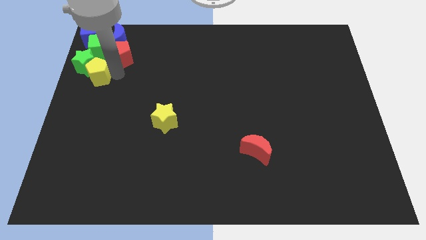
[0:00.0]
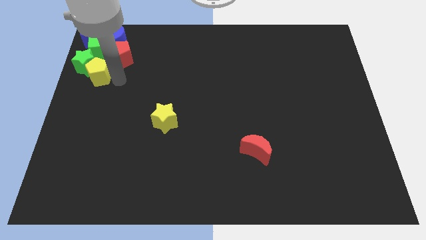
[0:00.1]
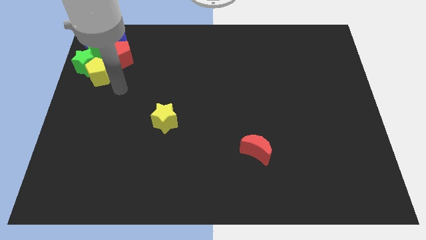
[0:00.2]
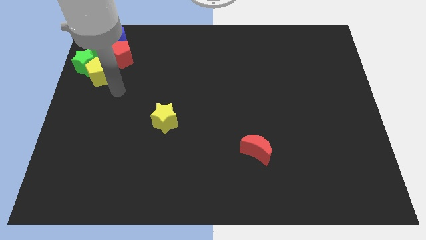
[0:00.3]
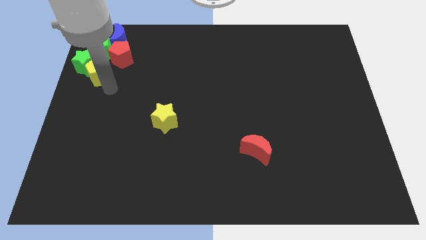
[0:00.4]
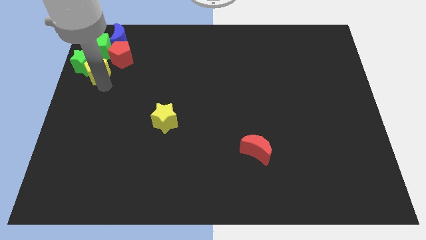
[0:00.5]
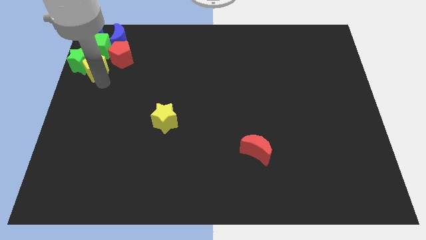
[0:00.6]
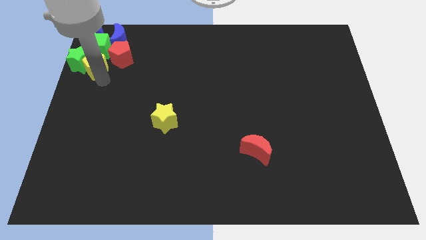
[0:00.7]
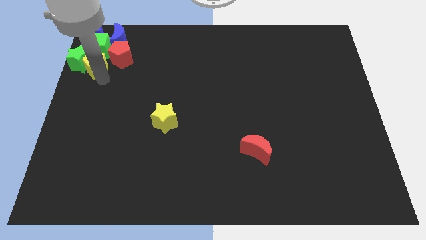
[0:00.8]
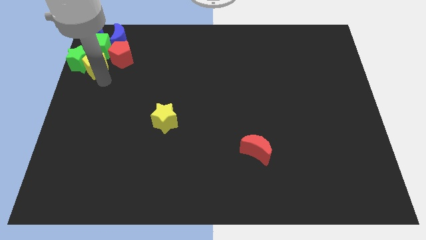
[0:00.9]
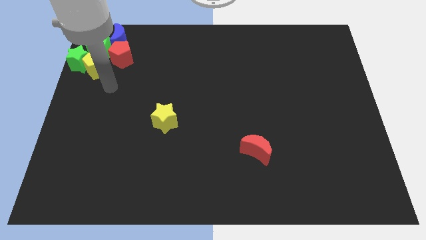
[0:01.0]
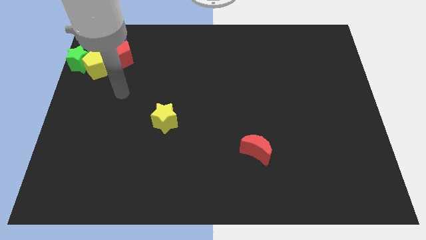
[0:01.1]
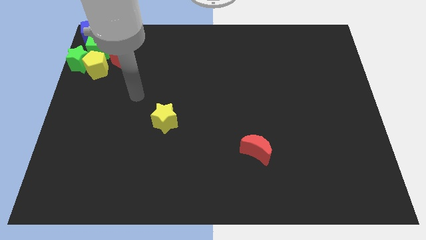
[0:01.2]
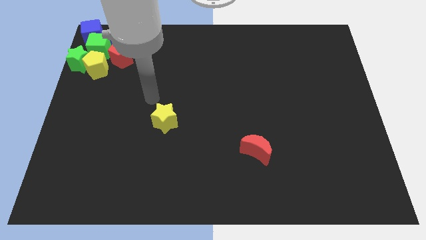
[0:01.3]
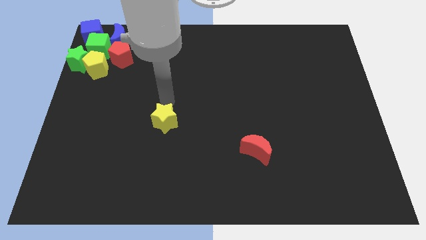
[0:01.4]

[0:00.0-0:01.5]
push the yellow pentagon to the right of the green star

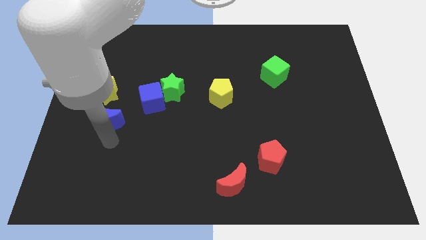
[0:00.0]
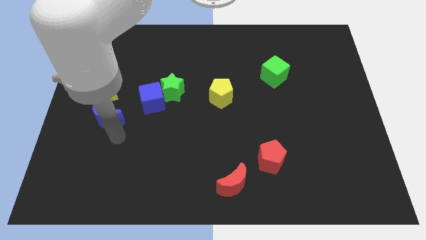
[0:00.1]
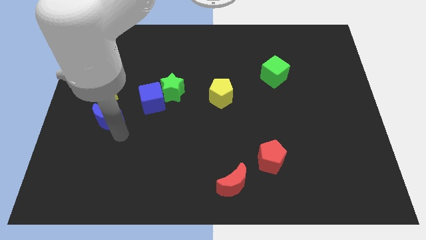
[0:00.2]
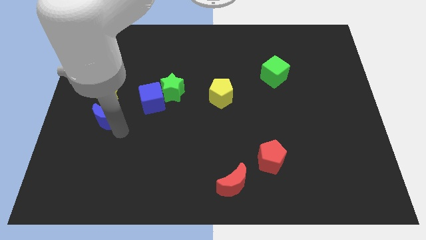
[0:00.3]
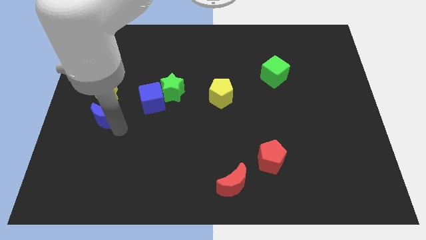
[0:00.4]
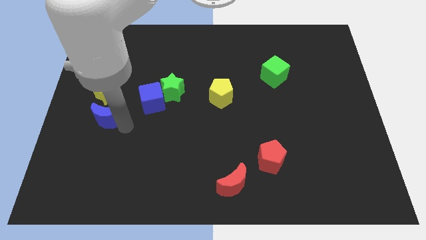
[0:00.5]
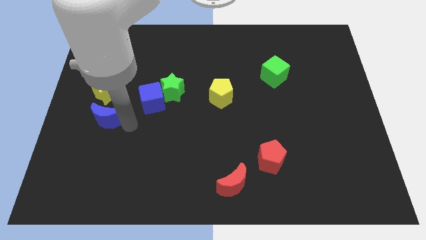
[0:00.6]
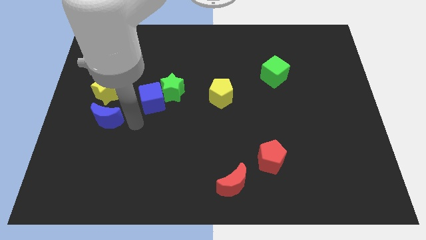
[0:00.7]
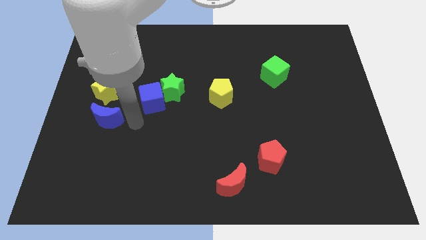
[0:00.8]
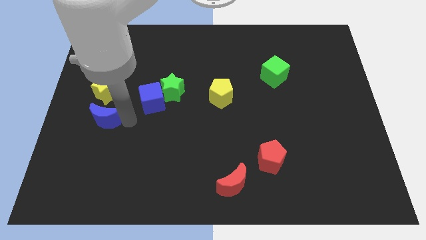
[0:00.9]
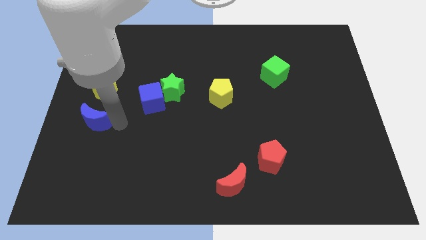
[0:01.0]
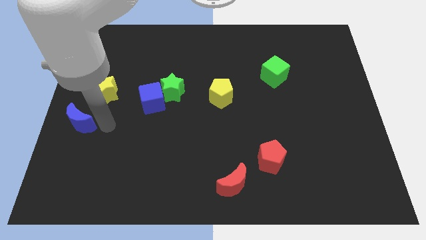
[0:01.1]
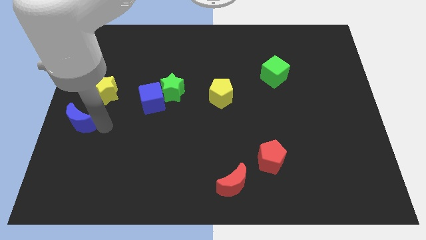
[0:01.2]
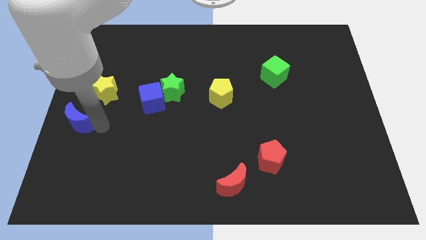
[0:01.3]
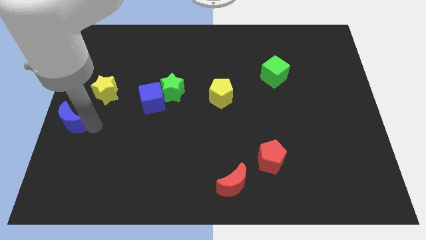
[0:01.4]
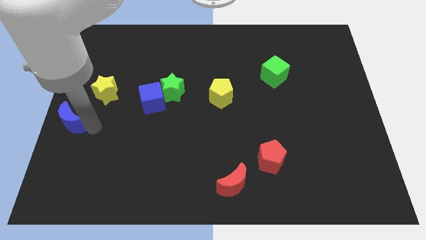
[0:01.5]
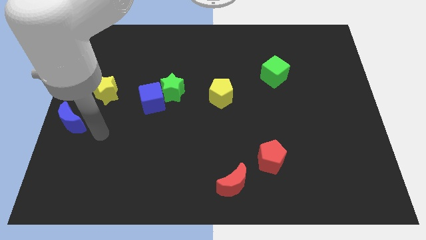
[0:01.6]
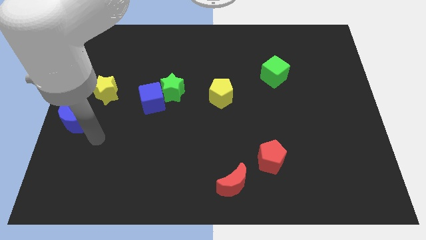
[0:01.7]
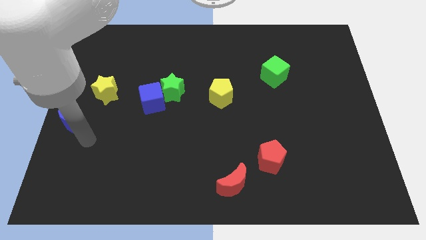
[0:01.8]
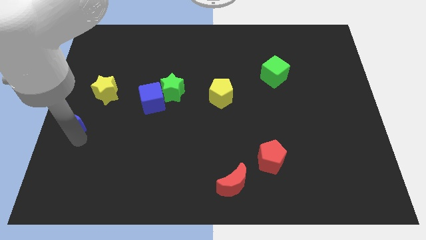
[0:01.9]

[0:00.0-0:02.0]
move the blue moon towards the center left

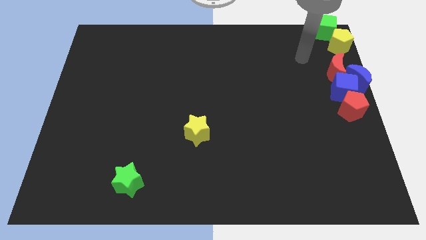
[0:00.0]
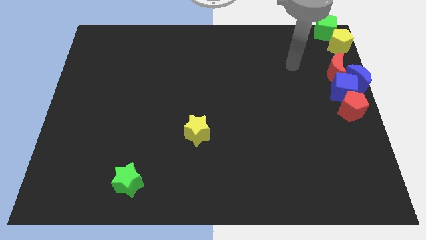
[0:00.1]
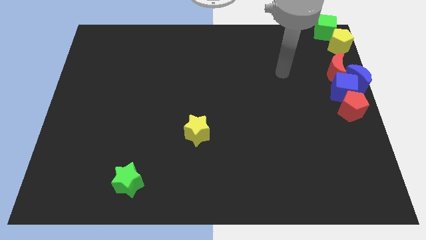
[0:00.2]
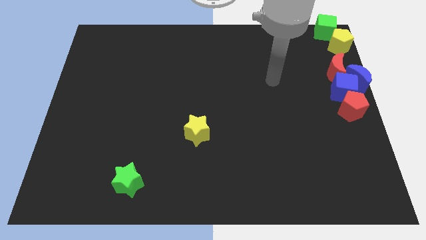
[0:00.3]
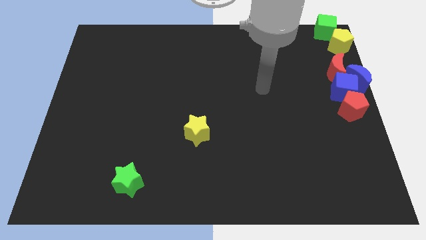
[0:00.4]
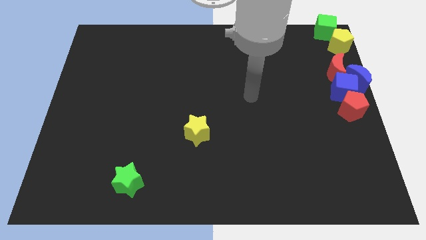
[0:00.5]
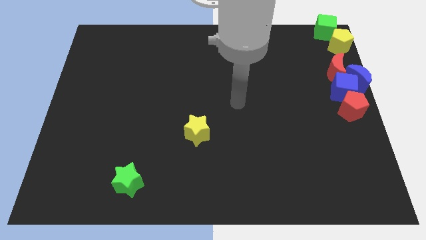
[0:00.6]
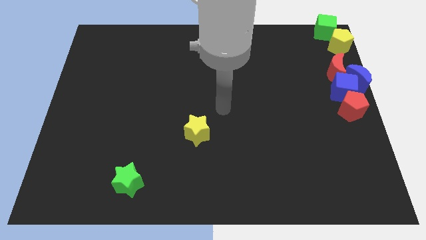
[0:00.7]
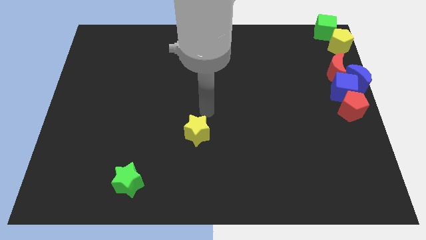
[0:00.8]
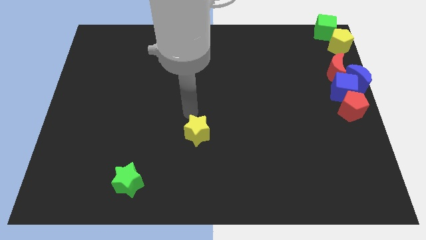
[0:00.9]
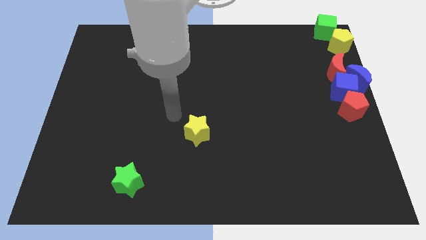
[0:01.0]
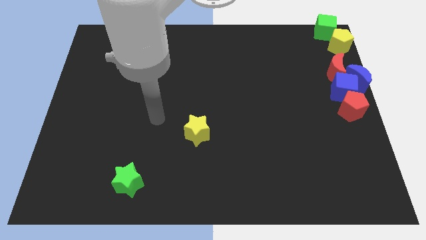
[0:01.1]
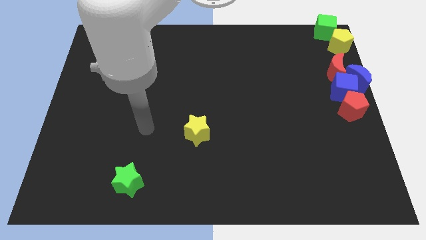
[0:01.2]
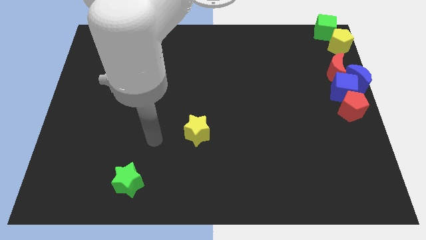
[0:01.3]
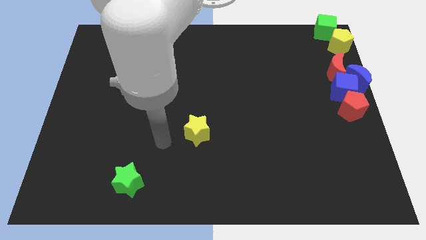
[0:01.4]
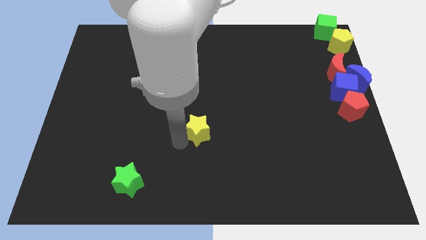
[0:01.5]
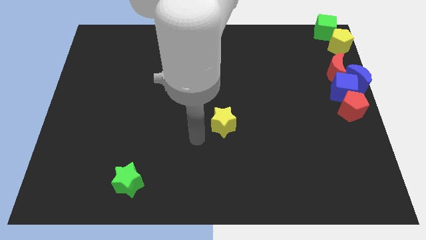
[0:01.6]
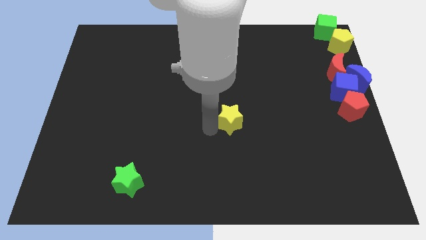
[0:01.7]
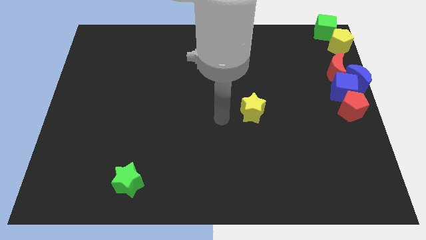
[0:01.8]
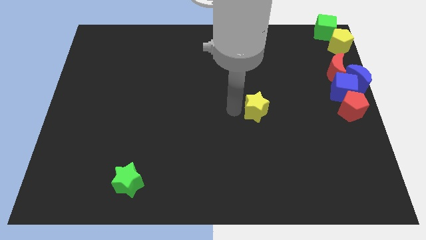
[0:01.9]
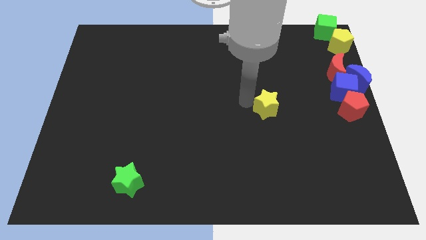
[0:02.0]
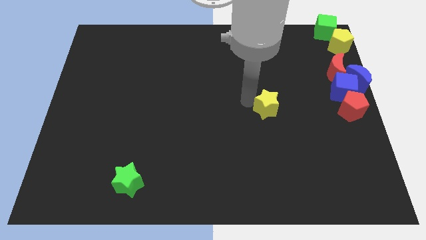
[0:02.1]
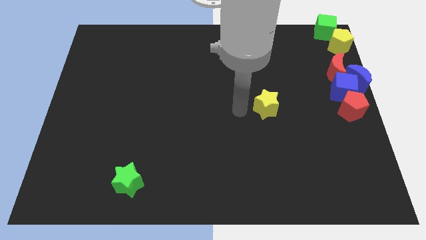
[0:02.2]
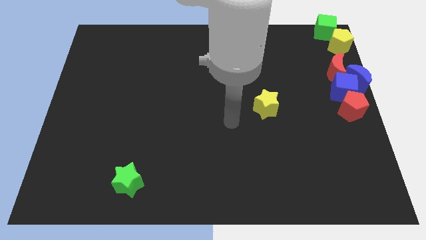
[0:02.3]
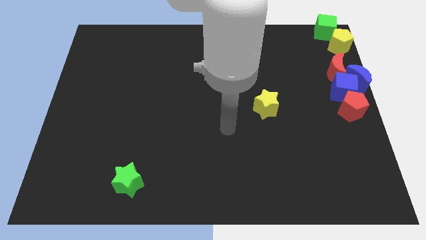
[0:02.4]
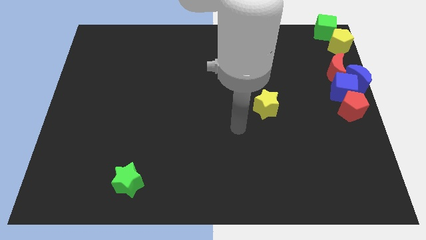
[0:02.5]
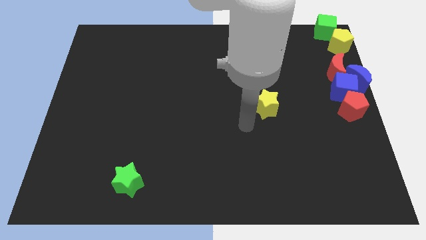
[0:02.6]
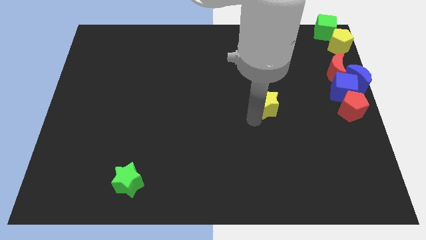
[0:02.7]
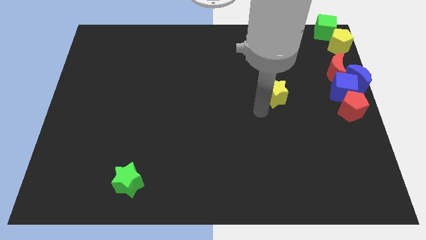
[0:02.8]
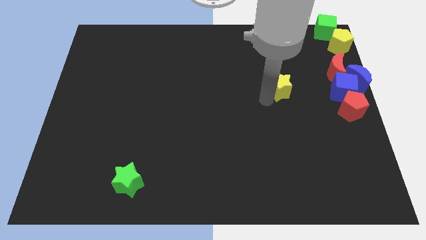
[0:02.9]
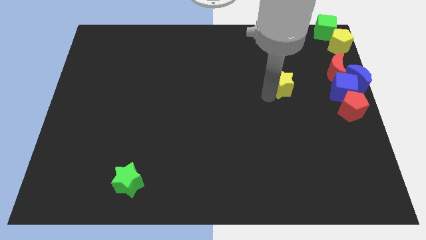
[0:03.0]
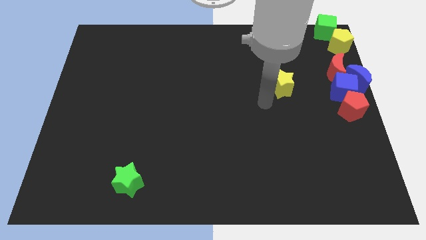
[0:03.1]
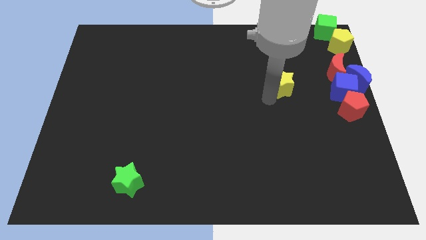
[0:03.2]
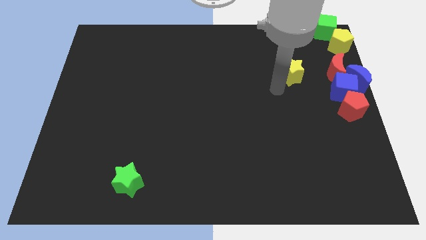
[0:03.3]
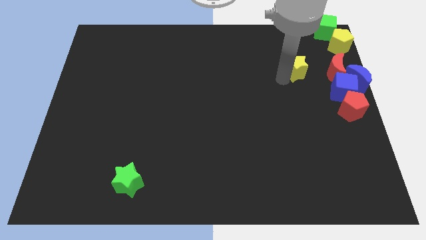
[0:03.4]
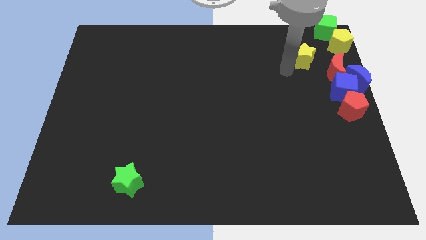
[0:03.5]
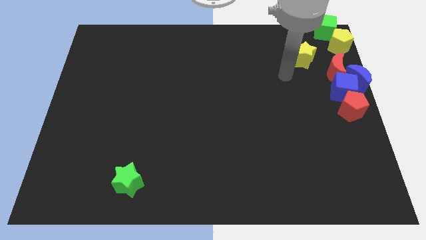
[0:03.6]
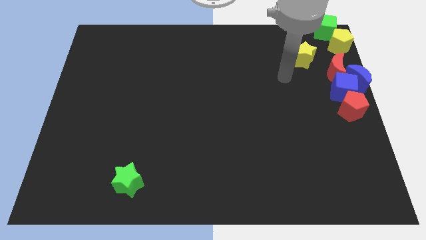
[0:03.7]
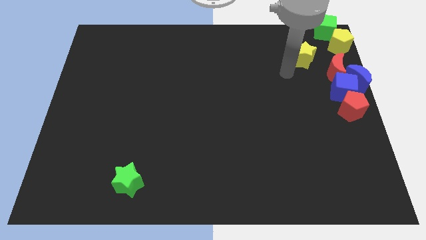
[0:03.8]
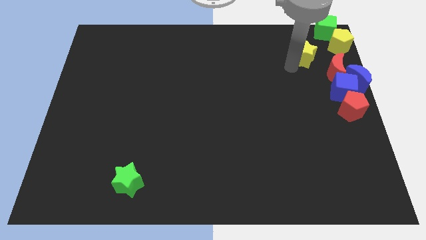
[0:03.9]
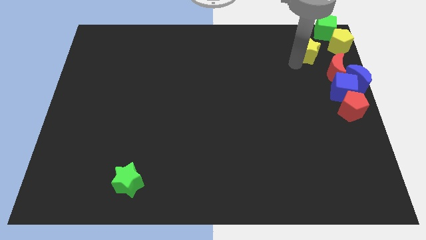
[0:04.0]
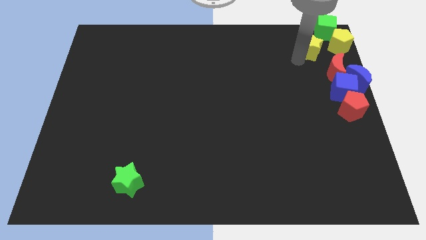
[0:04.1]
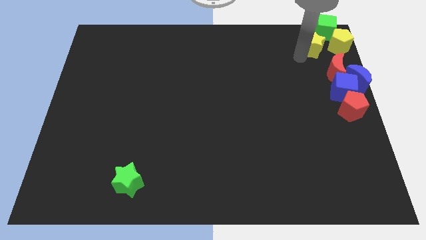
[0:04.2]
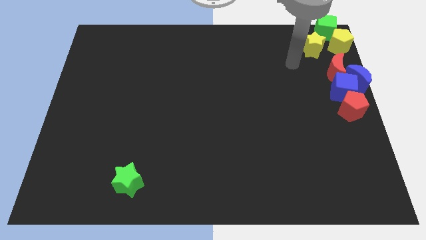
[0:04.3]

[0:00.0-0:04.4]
move the yellow star to the left of the yellow pentagon

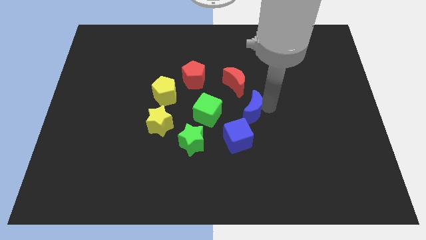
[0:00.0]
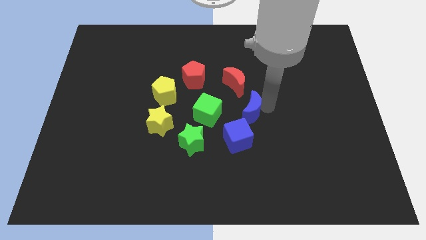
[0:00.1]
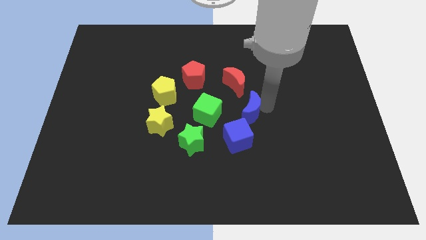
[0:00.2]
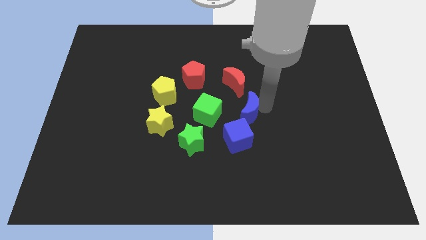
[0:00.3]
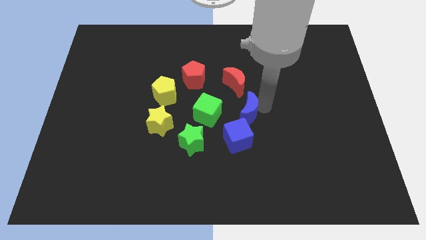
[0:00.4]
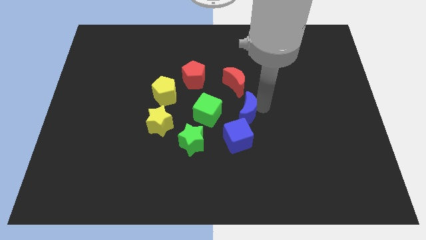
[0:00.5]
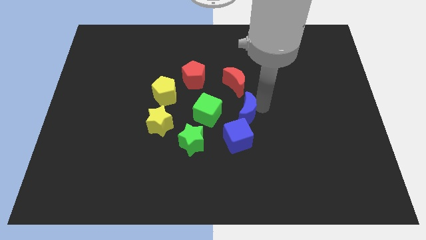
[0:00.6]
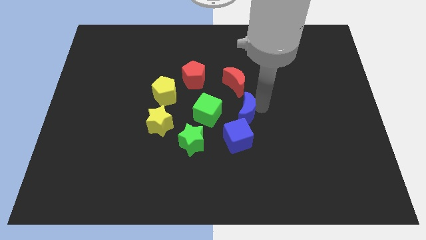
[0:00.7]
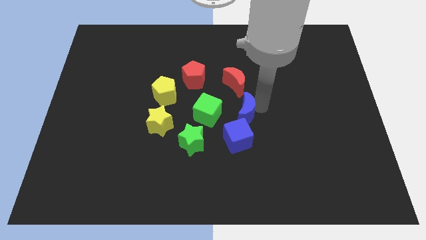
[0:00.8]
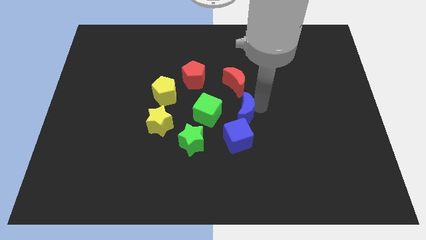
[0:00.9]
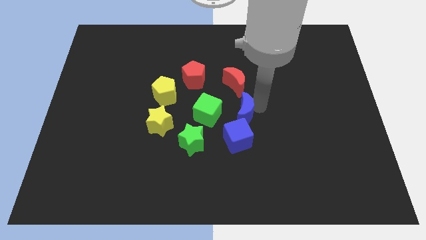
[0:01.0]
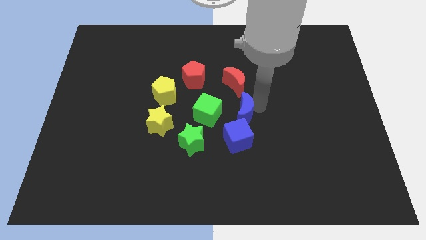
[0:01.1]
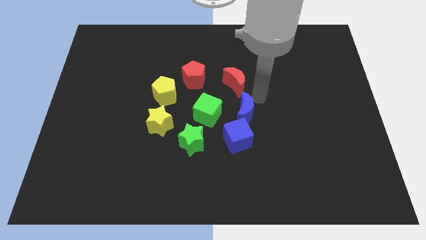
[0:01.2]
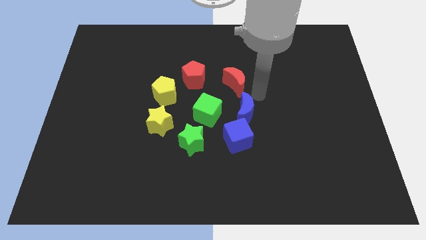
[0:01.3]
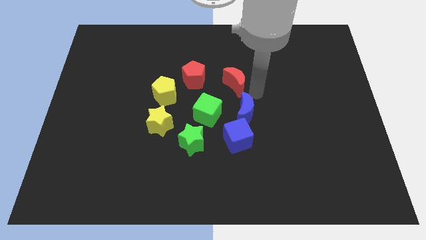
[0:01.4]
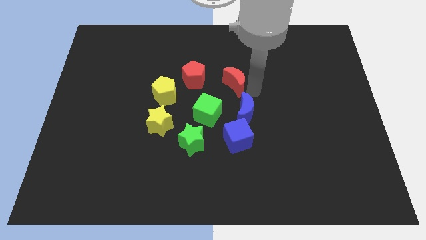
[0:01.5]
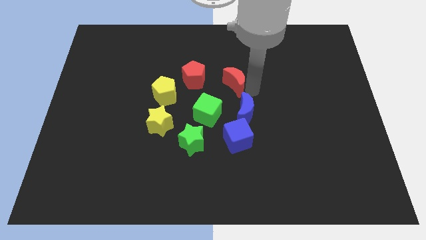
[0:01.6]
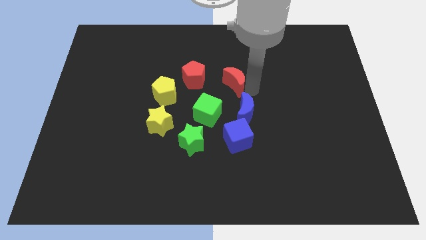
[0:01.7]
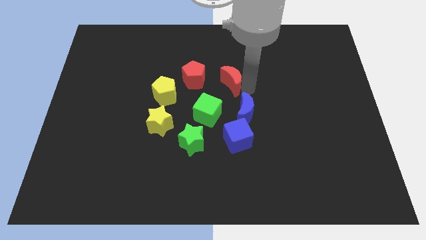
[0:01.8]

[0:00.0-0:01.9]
place the blue moon in between red moon and blue cube
